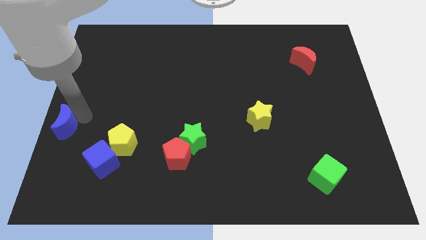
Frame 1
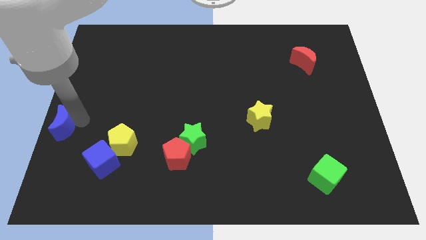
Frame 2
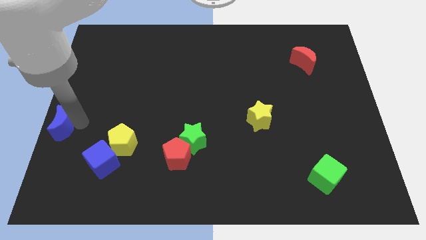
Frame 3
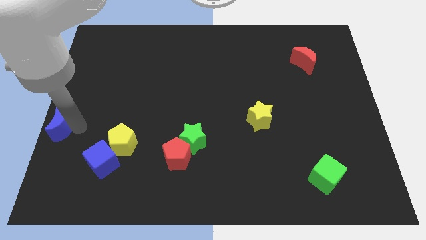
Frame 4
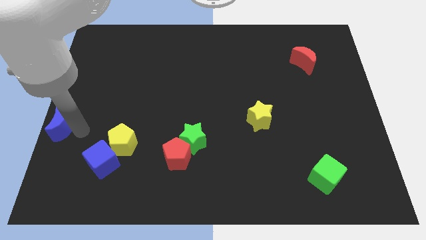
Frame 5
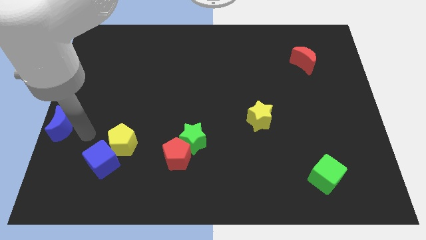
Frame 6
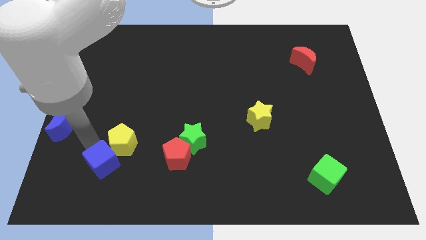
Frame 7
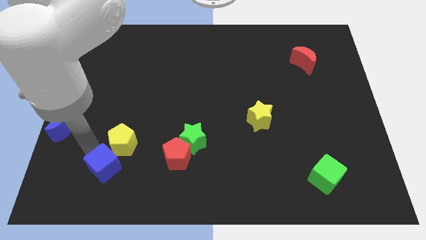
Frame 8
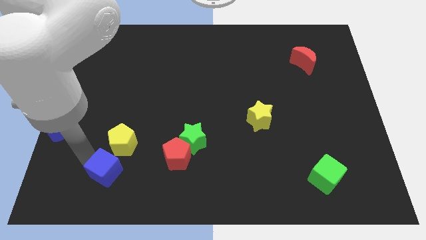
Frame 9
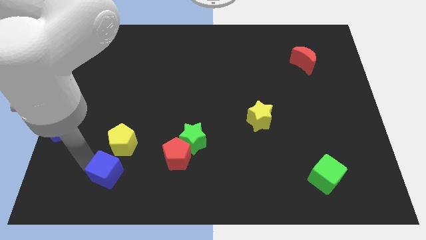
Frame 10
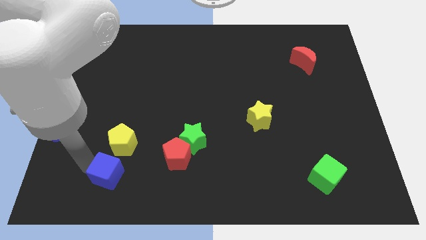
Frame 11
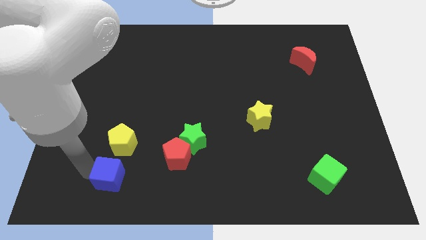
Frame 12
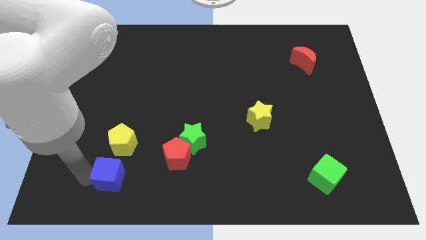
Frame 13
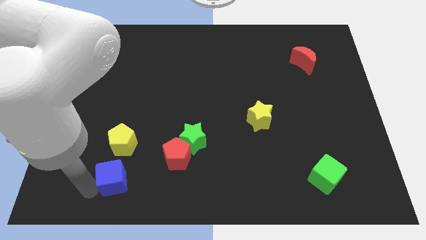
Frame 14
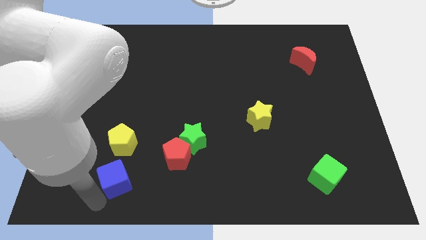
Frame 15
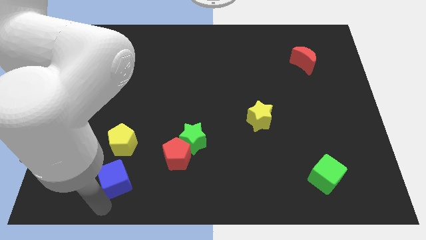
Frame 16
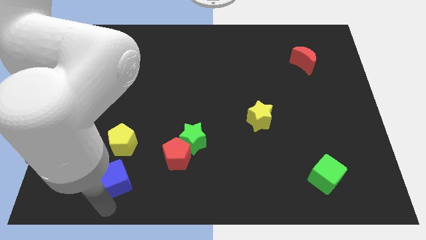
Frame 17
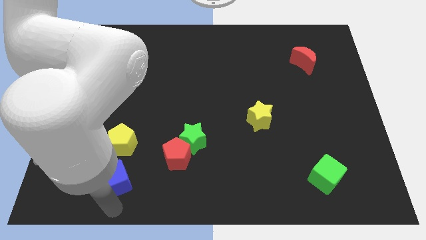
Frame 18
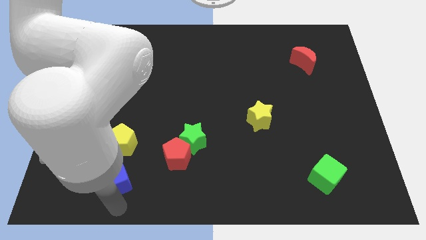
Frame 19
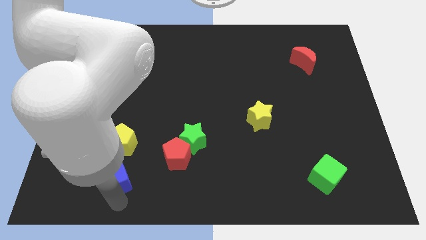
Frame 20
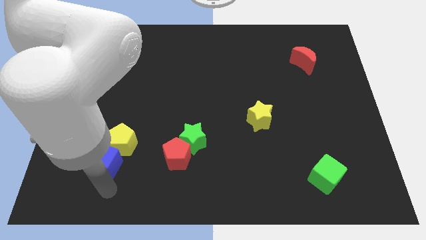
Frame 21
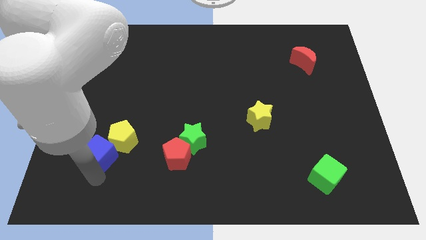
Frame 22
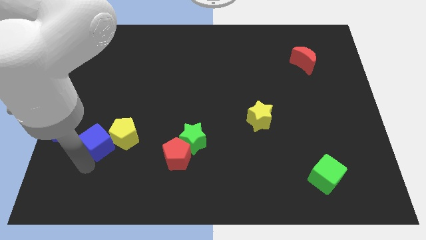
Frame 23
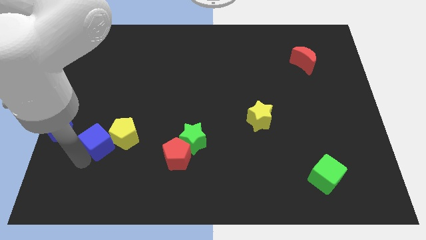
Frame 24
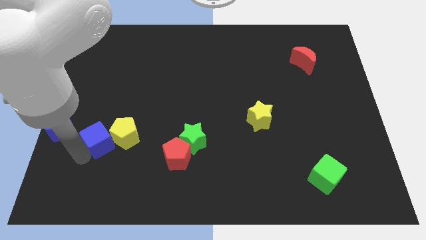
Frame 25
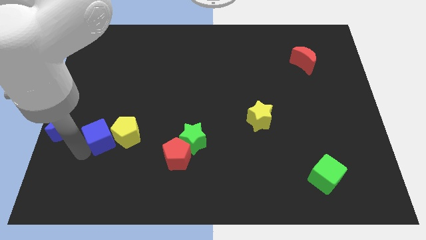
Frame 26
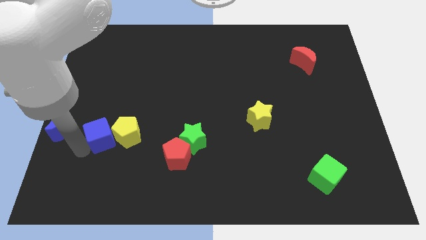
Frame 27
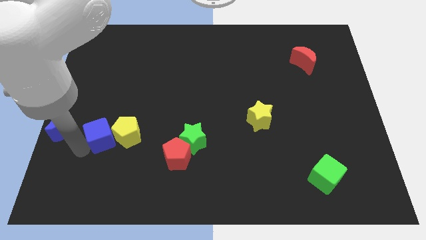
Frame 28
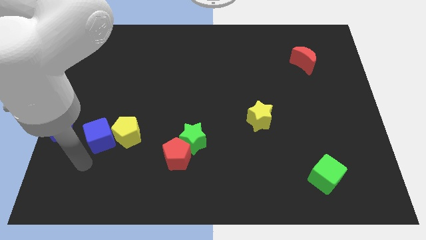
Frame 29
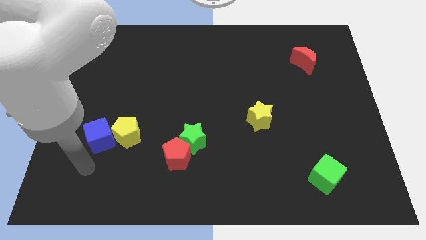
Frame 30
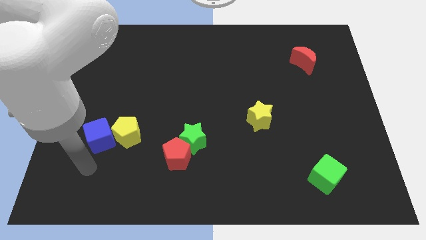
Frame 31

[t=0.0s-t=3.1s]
slide the blue cube to the left of the yellow pentagon

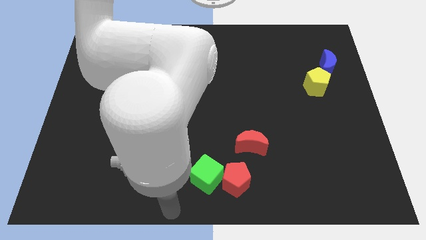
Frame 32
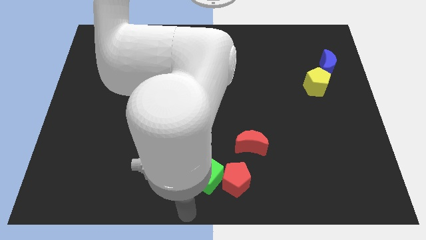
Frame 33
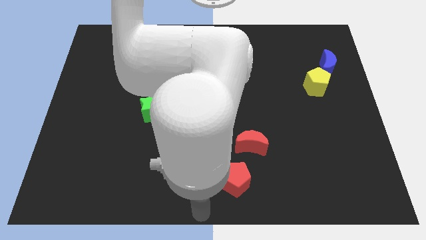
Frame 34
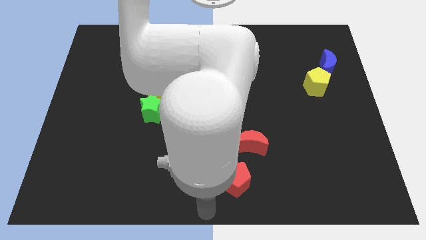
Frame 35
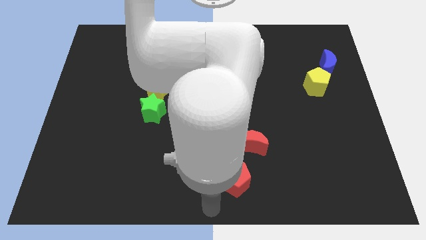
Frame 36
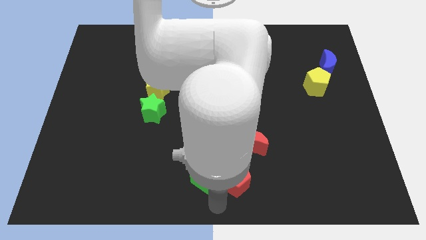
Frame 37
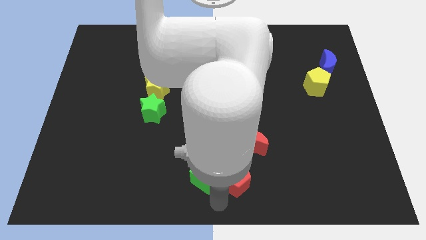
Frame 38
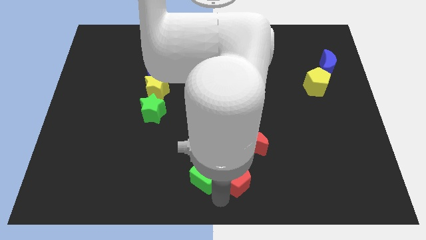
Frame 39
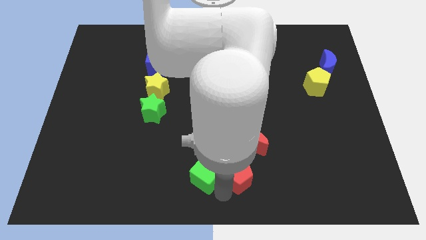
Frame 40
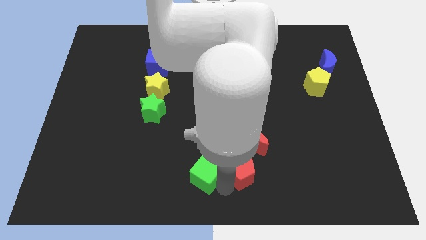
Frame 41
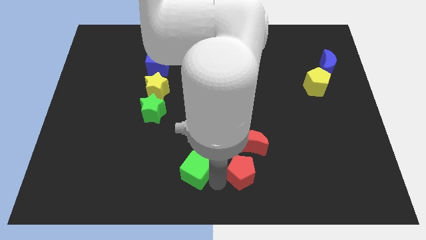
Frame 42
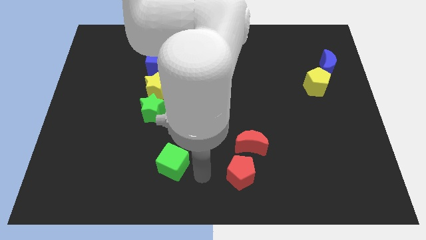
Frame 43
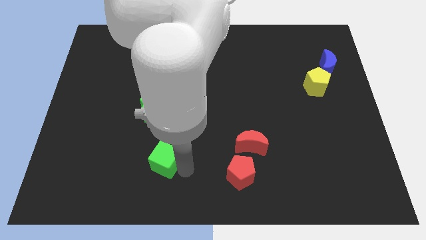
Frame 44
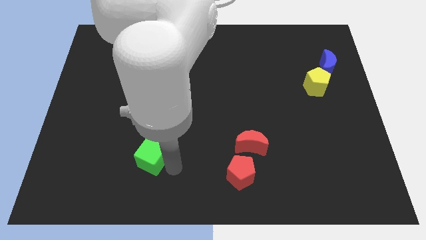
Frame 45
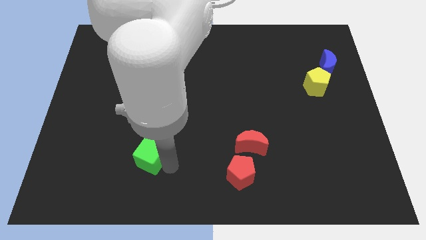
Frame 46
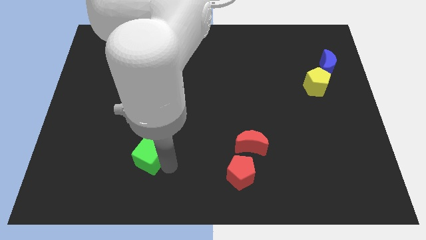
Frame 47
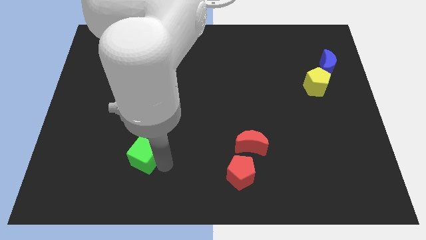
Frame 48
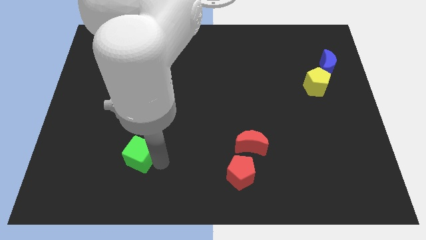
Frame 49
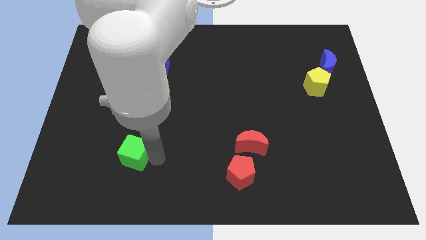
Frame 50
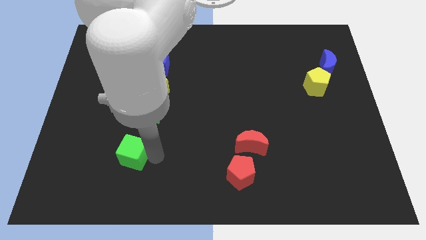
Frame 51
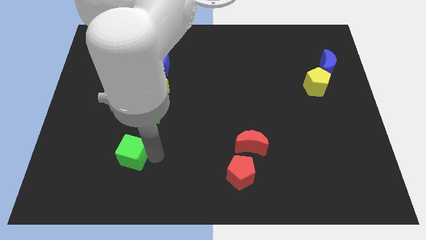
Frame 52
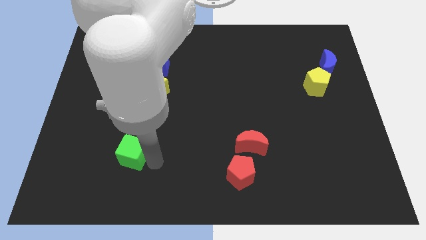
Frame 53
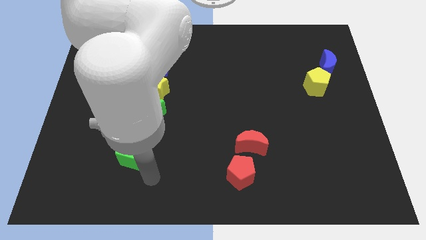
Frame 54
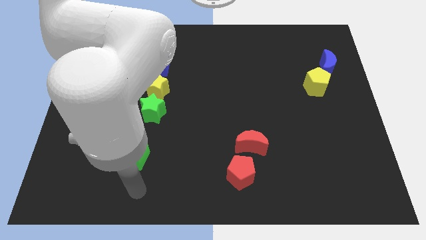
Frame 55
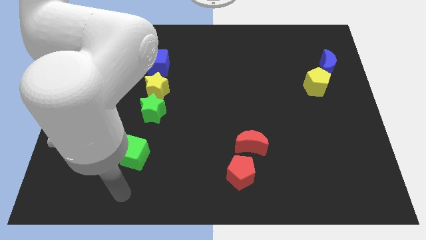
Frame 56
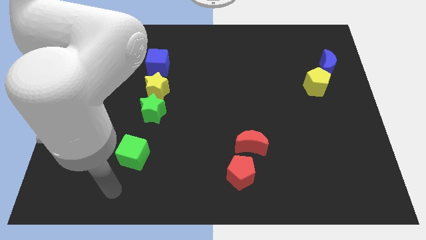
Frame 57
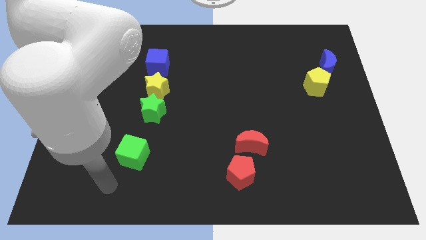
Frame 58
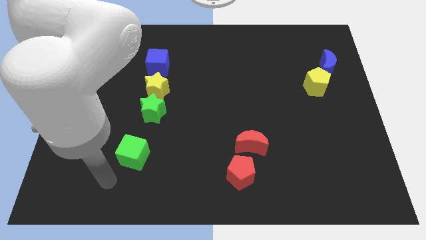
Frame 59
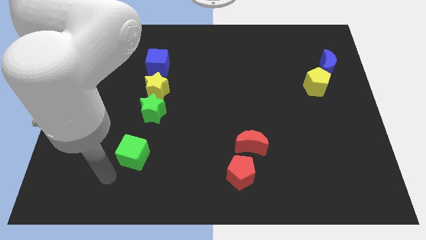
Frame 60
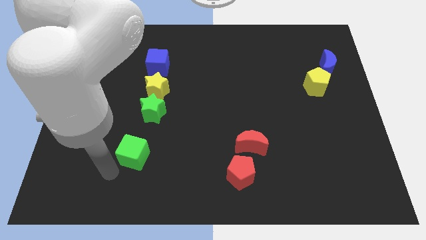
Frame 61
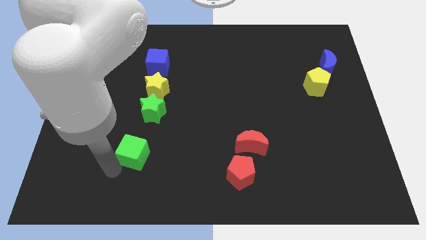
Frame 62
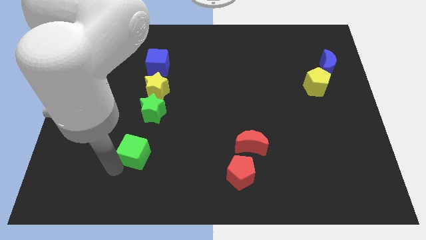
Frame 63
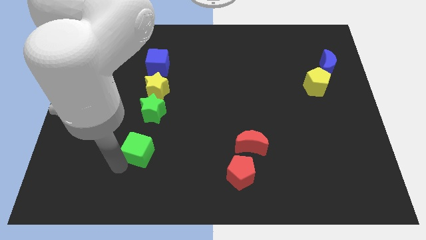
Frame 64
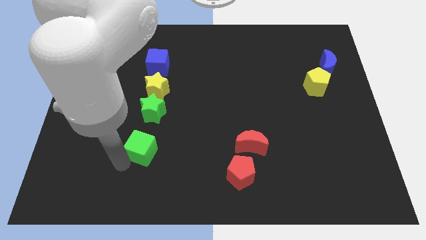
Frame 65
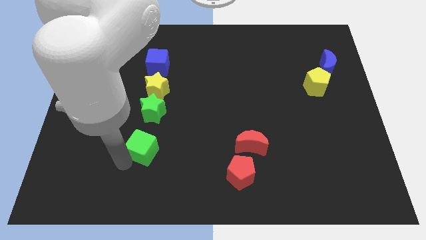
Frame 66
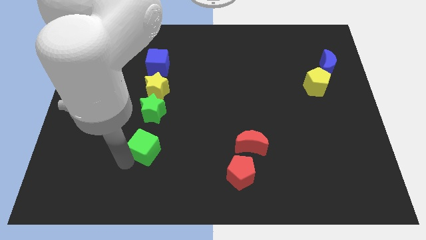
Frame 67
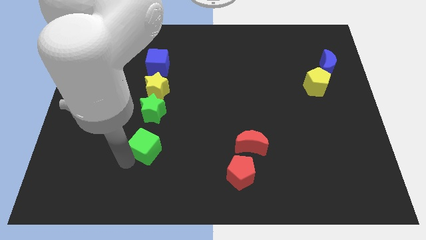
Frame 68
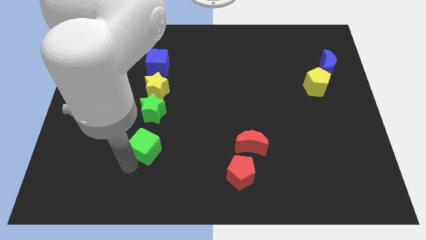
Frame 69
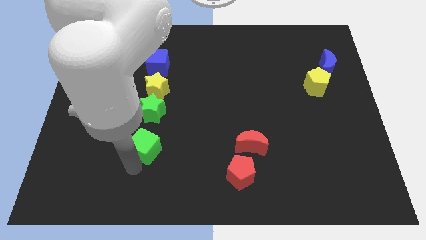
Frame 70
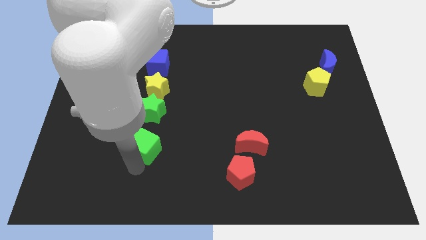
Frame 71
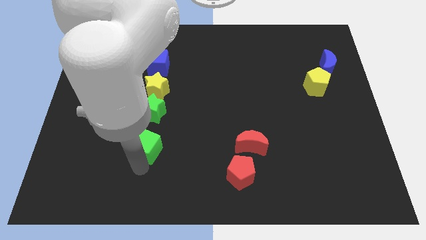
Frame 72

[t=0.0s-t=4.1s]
separate the green cube from the red pentagon

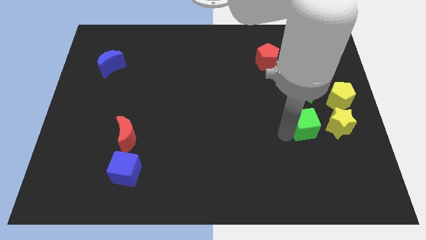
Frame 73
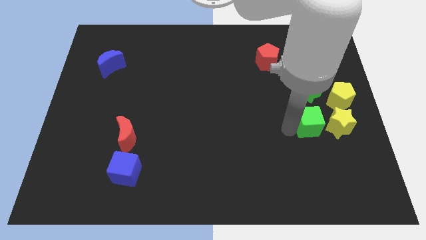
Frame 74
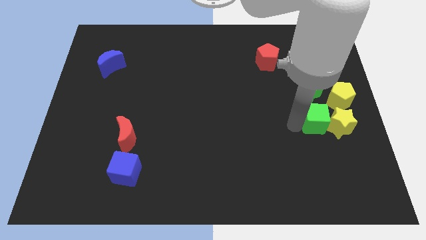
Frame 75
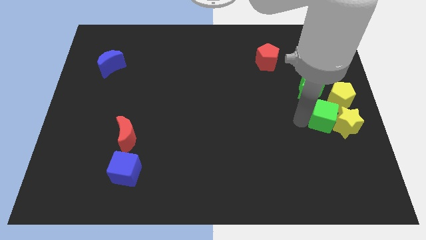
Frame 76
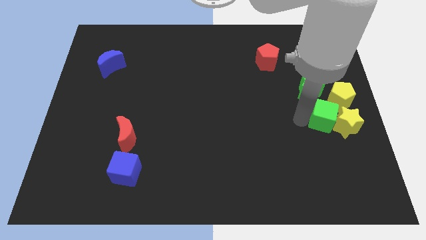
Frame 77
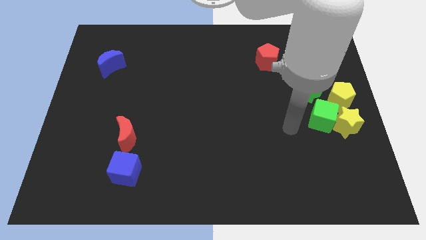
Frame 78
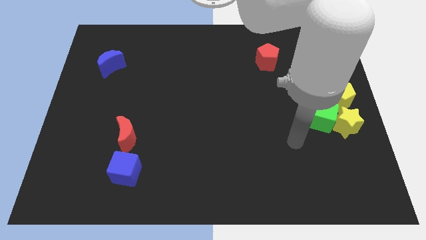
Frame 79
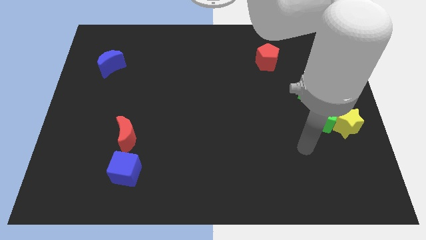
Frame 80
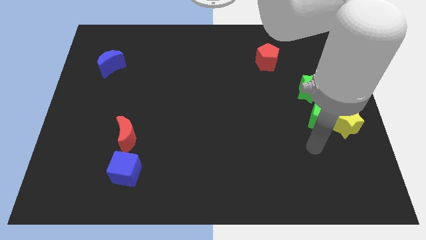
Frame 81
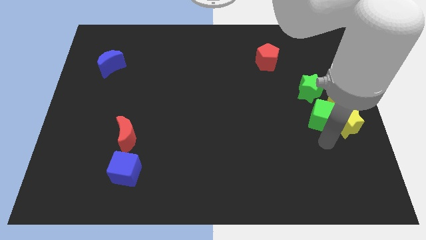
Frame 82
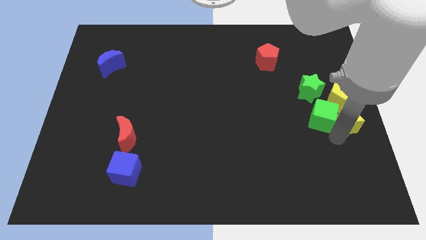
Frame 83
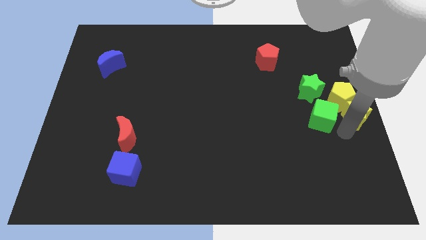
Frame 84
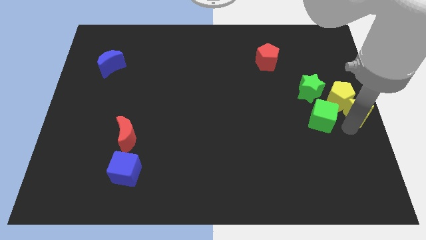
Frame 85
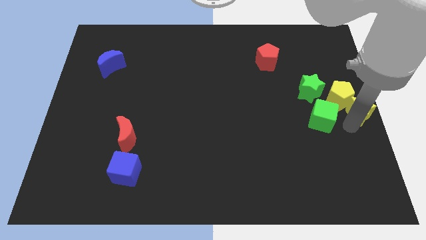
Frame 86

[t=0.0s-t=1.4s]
push the green cube into the yellow star

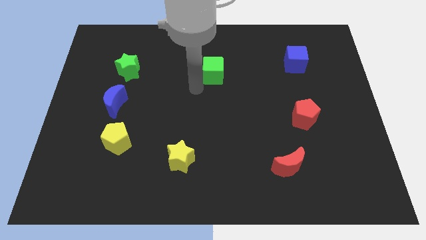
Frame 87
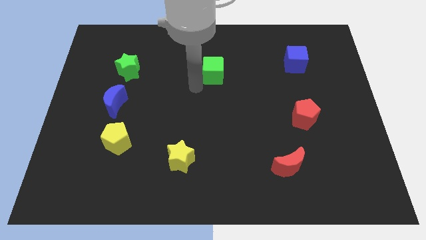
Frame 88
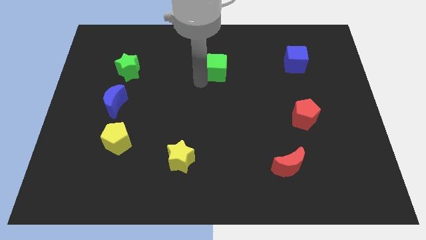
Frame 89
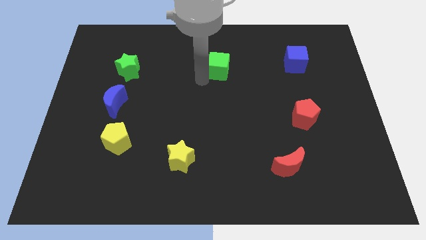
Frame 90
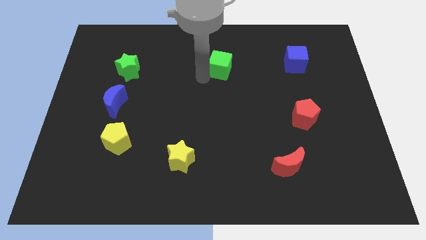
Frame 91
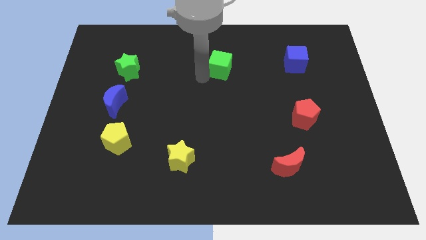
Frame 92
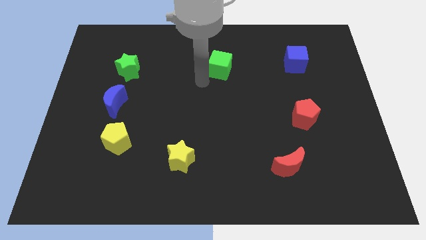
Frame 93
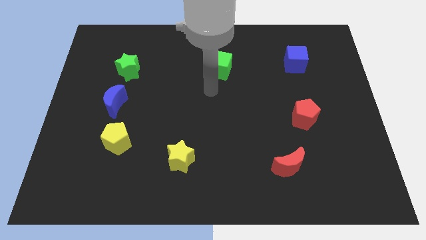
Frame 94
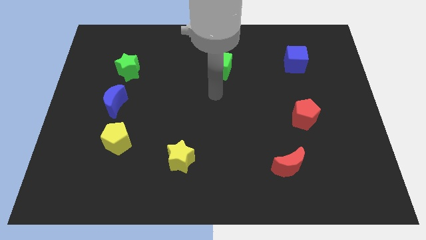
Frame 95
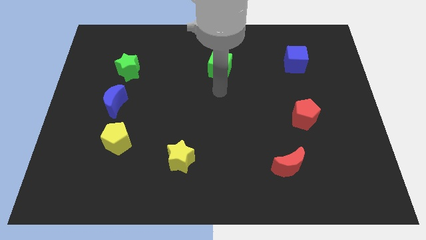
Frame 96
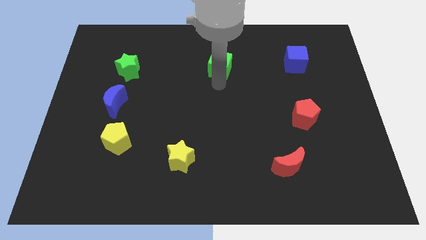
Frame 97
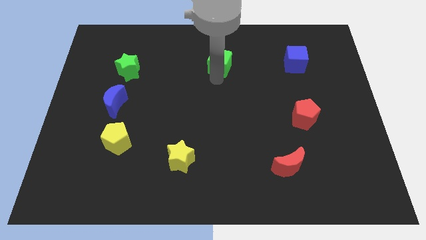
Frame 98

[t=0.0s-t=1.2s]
move the green cube slightly to the top center of the board
